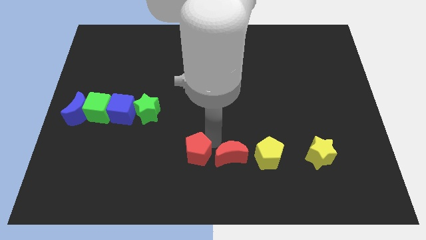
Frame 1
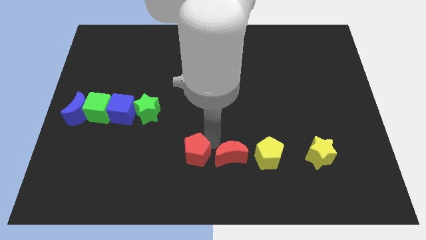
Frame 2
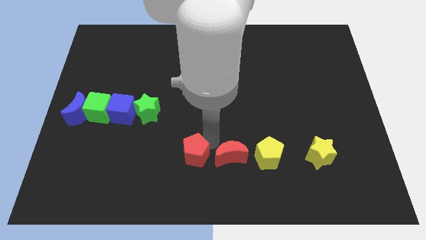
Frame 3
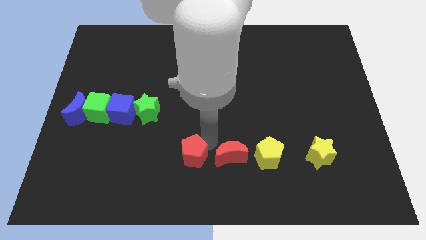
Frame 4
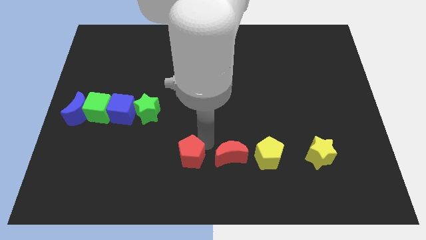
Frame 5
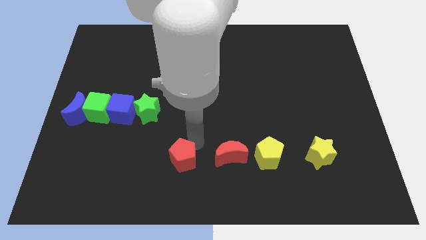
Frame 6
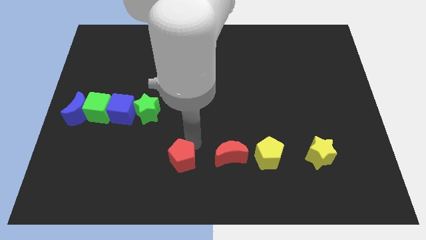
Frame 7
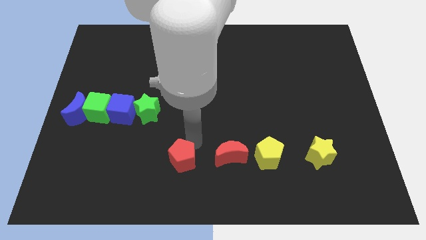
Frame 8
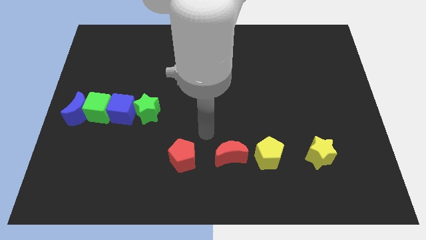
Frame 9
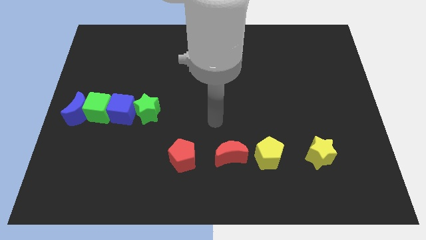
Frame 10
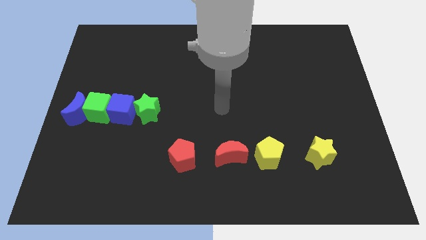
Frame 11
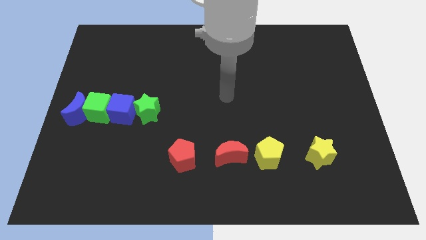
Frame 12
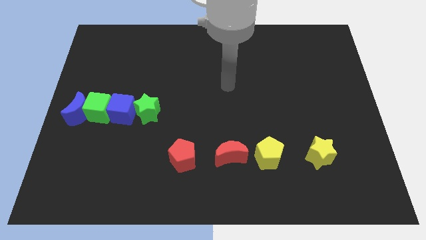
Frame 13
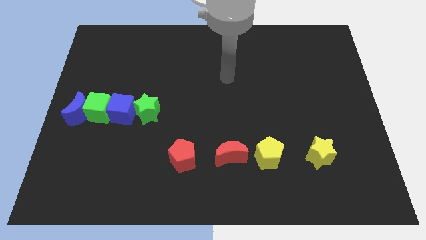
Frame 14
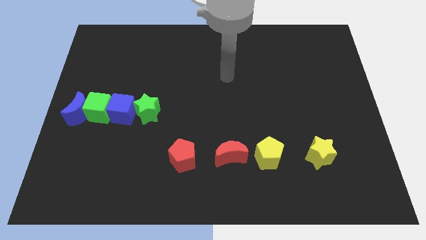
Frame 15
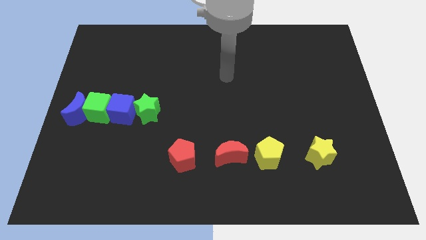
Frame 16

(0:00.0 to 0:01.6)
move the red pentagon to the left of the red moon

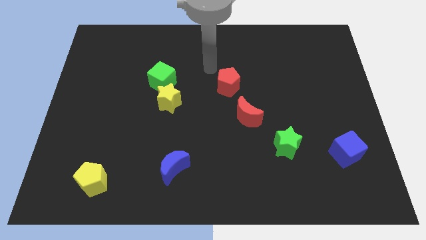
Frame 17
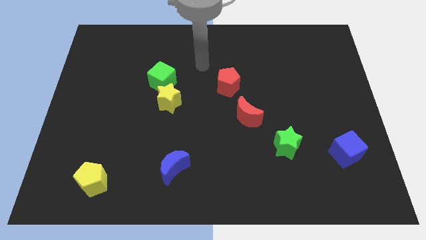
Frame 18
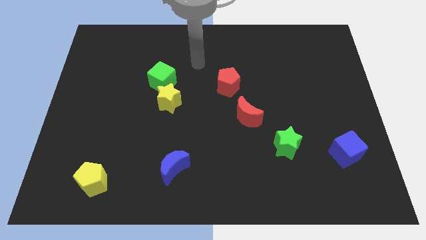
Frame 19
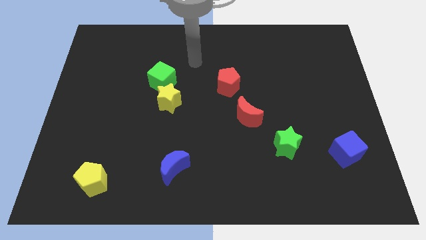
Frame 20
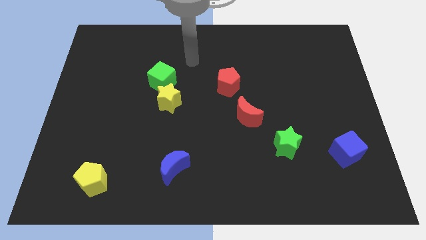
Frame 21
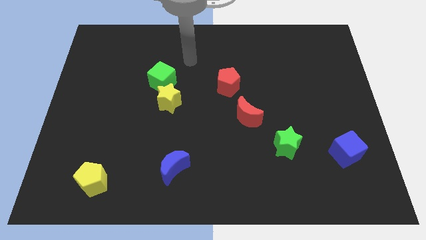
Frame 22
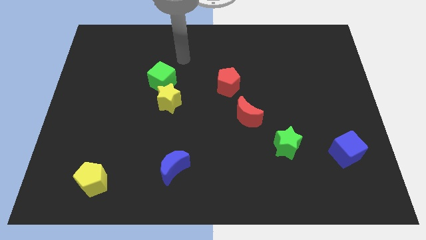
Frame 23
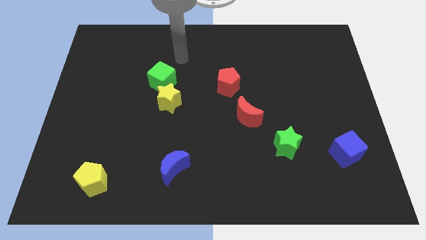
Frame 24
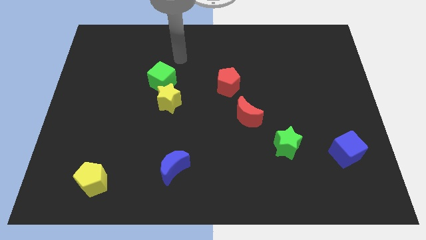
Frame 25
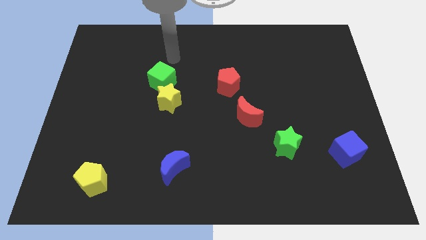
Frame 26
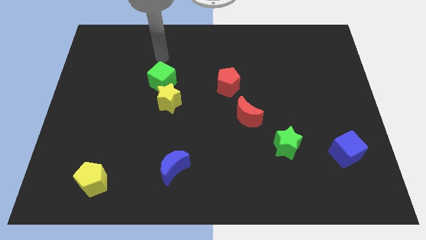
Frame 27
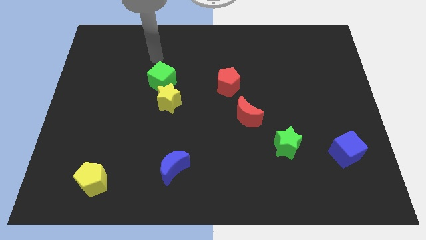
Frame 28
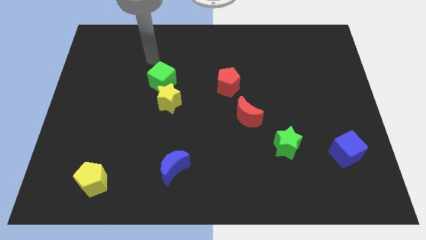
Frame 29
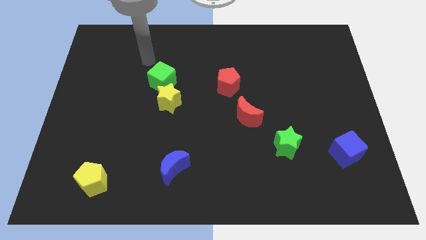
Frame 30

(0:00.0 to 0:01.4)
point your arm at the top of the green cube

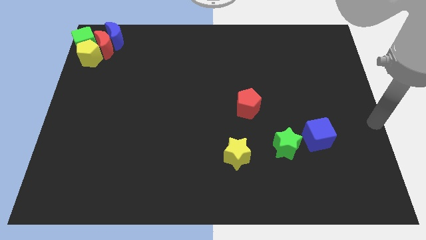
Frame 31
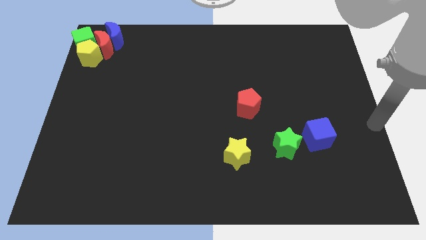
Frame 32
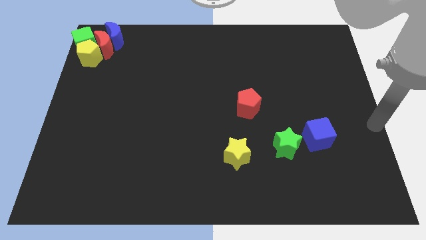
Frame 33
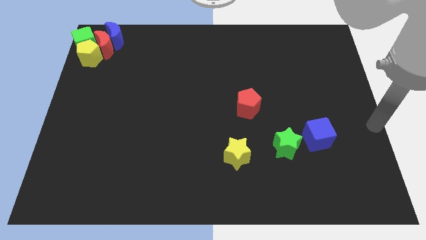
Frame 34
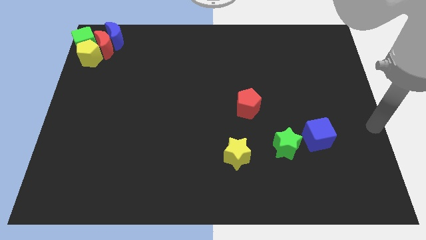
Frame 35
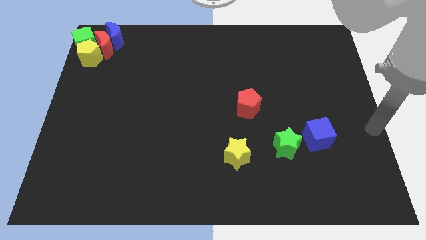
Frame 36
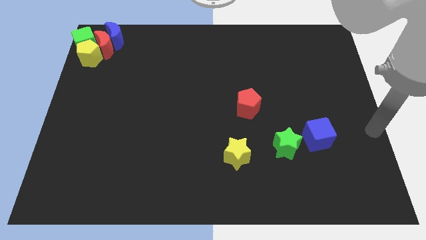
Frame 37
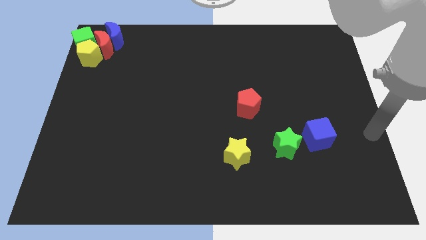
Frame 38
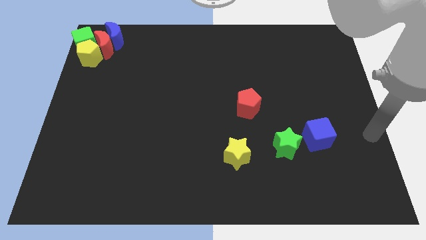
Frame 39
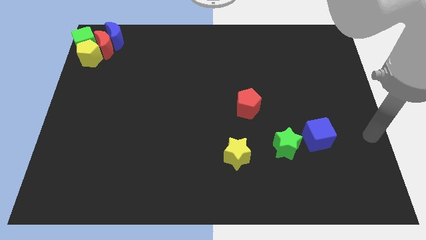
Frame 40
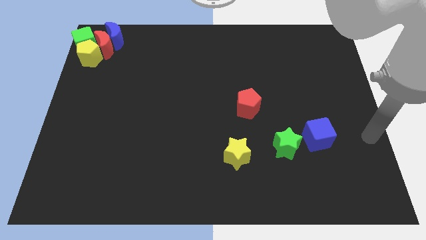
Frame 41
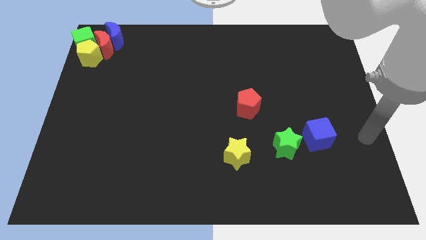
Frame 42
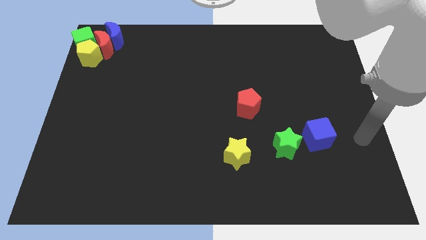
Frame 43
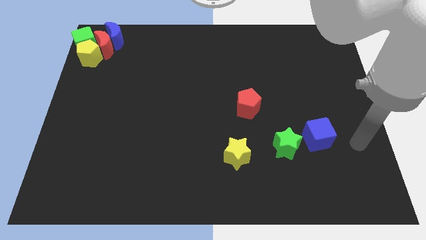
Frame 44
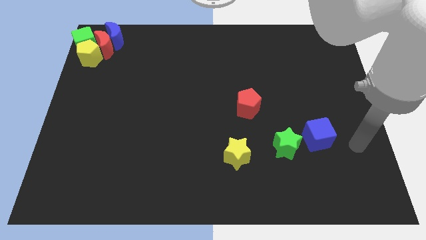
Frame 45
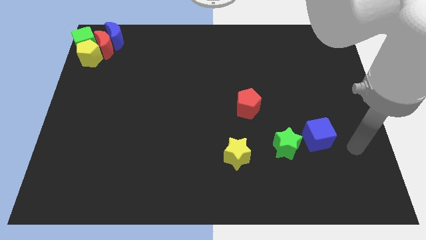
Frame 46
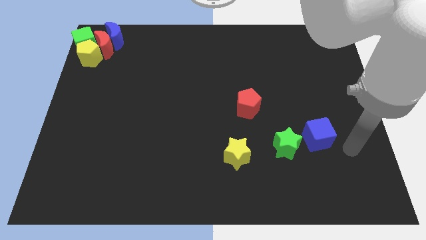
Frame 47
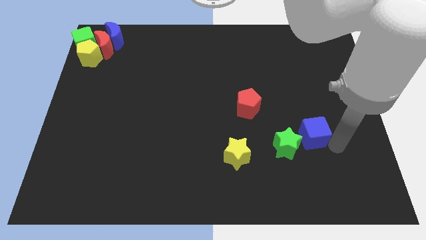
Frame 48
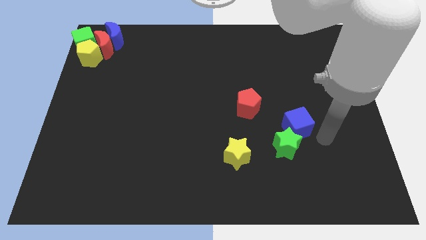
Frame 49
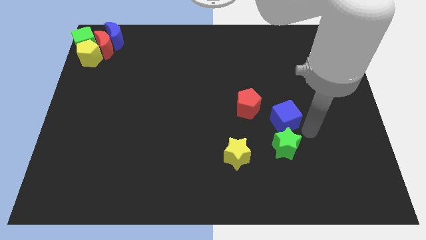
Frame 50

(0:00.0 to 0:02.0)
place the blue cube to the top side of the green star

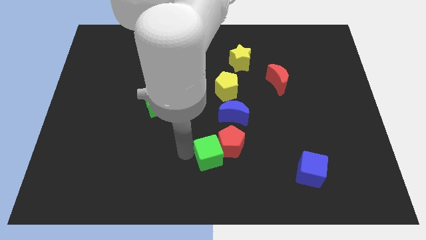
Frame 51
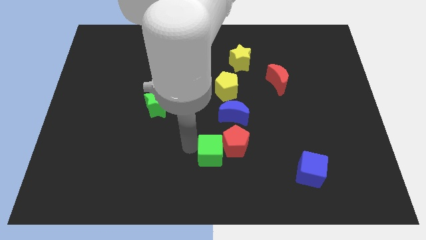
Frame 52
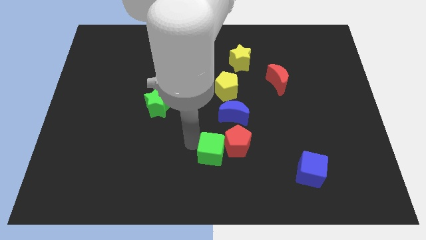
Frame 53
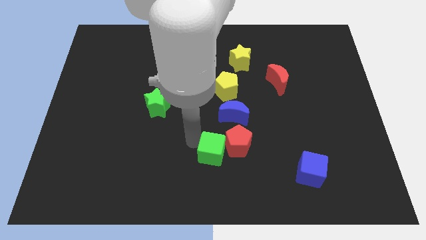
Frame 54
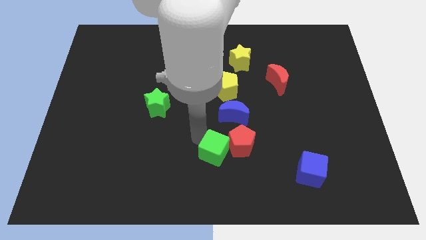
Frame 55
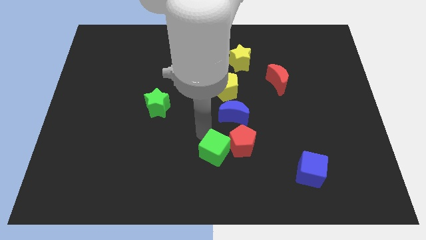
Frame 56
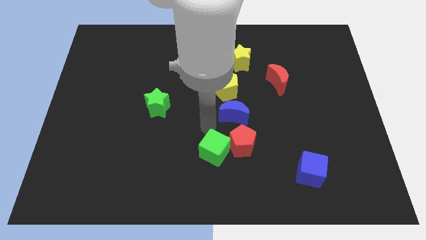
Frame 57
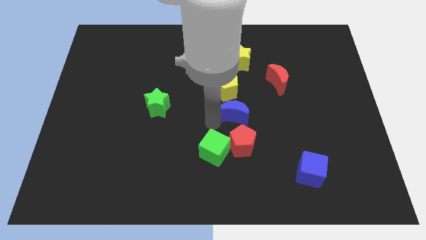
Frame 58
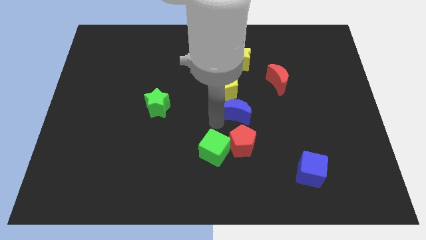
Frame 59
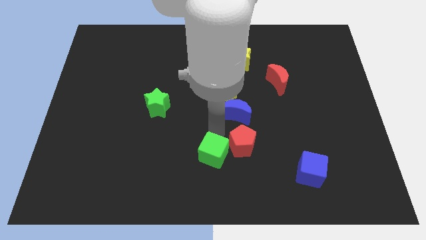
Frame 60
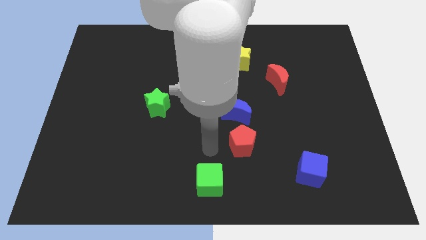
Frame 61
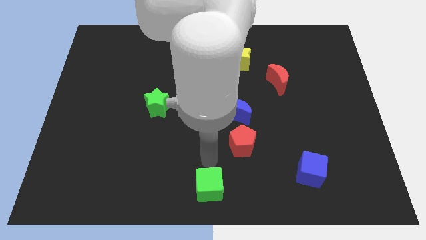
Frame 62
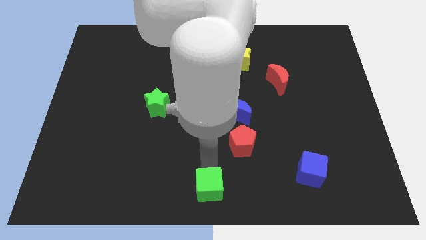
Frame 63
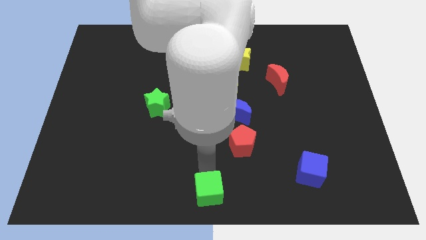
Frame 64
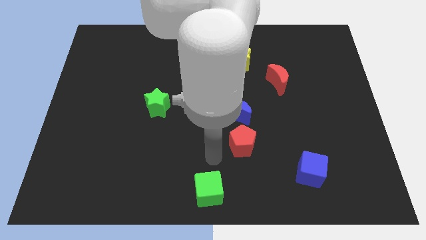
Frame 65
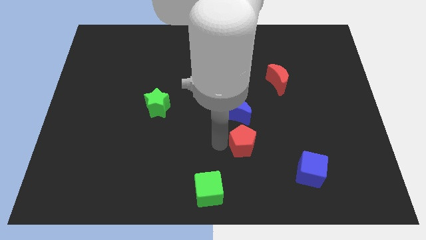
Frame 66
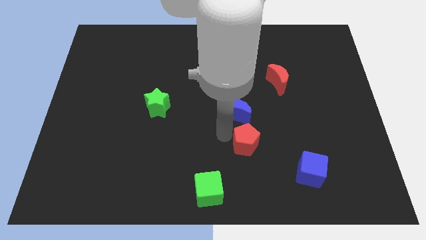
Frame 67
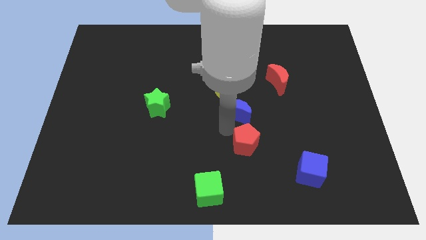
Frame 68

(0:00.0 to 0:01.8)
separate the green cube from the red pentagon

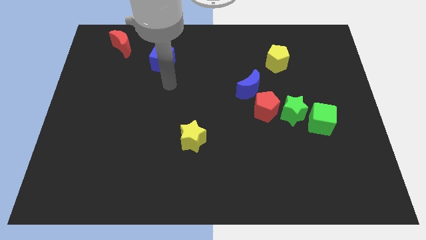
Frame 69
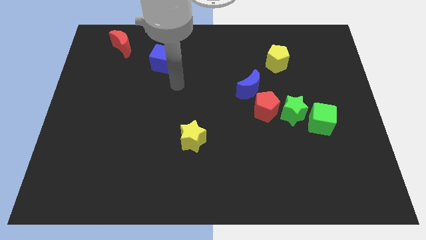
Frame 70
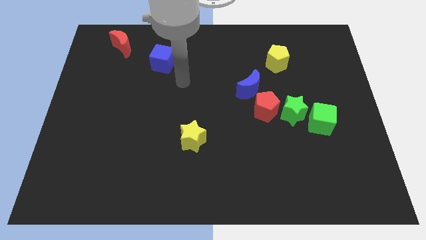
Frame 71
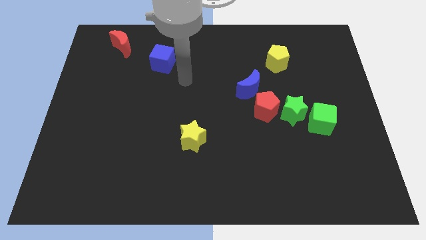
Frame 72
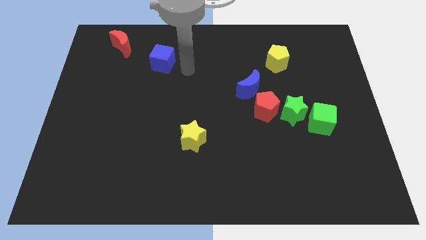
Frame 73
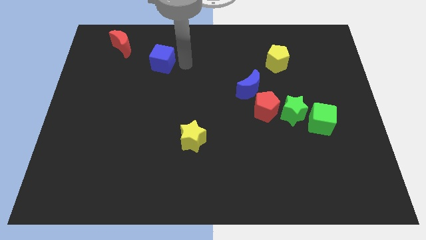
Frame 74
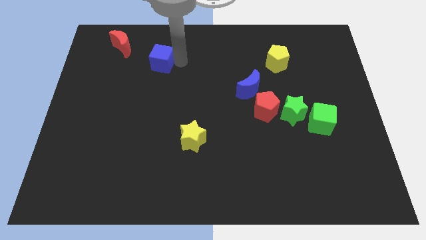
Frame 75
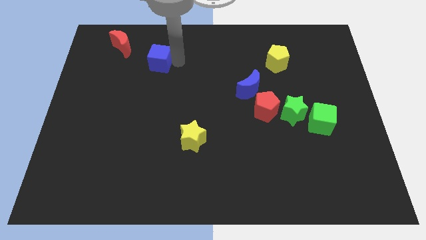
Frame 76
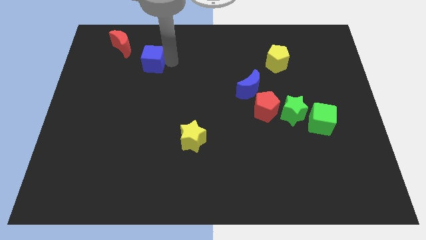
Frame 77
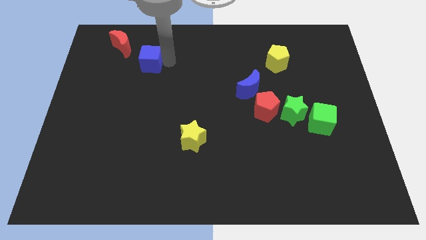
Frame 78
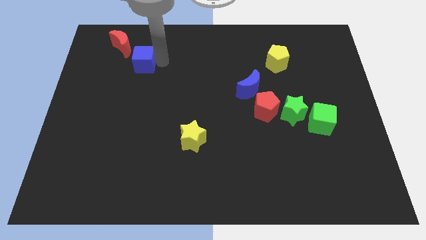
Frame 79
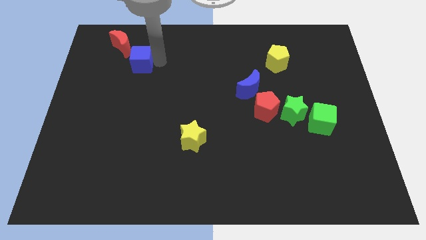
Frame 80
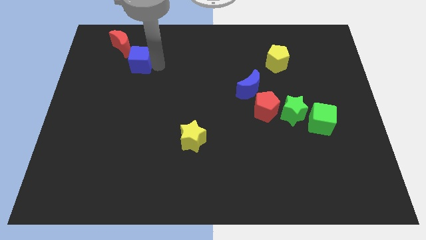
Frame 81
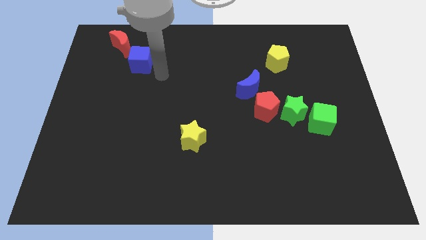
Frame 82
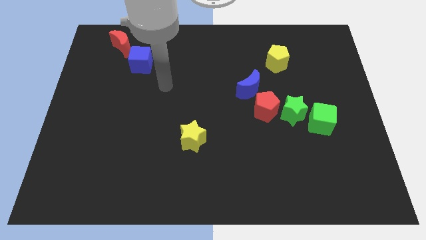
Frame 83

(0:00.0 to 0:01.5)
move the blue cube close to the red crescent

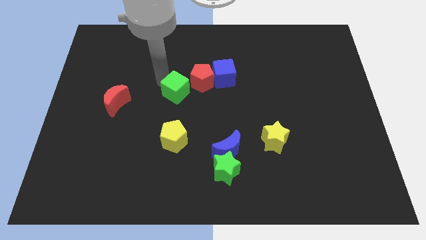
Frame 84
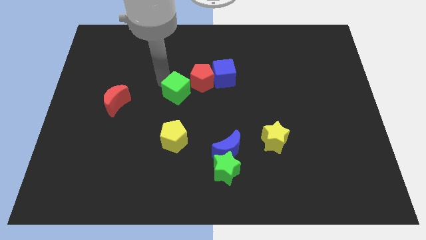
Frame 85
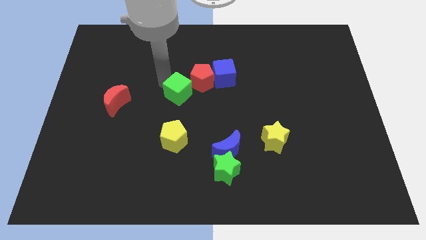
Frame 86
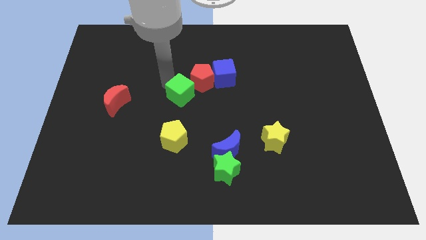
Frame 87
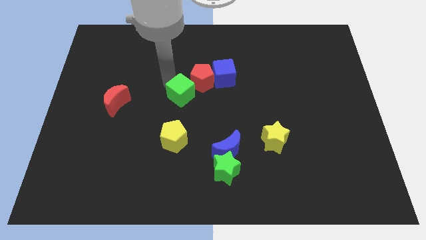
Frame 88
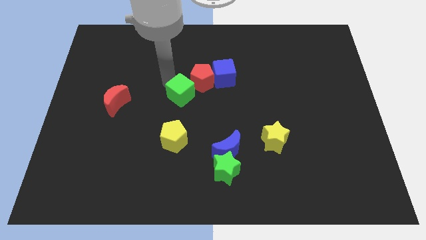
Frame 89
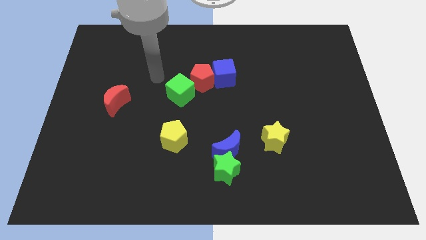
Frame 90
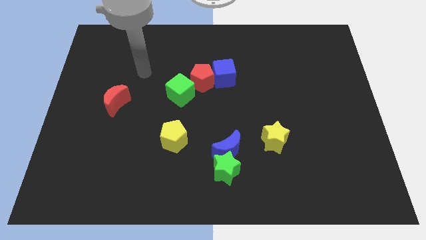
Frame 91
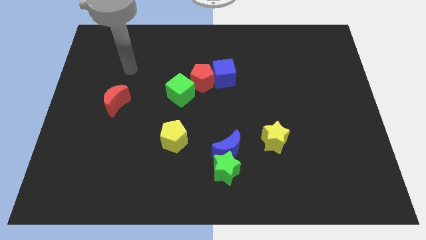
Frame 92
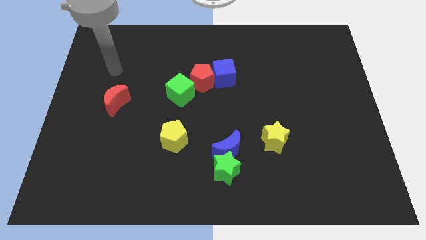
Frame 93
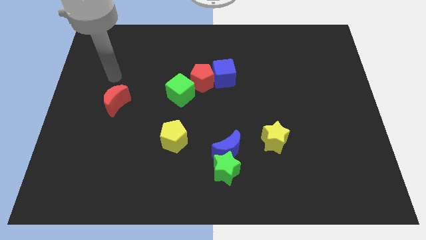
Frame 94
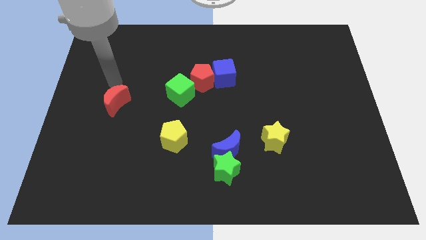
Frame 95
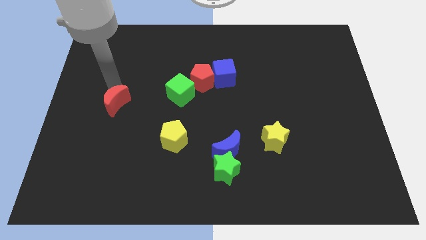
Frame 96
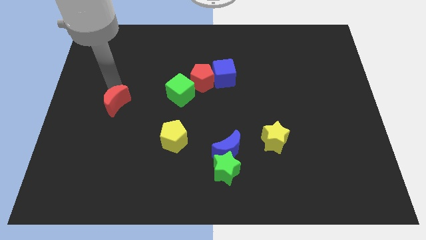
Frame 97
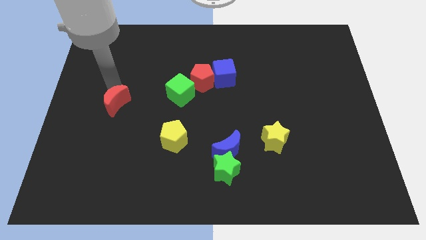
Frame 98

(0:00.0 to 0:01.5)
slightly push the green cube
